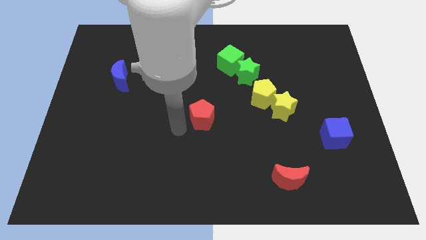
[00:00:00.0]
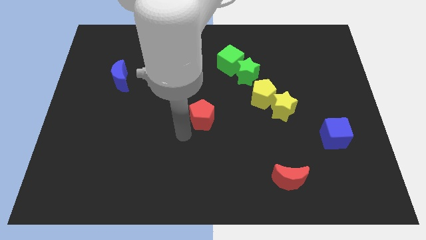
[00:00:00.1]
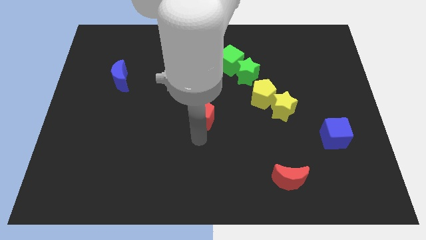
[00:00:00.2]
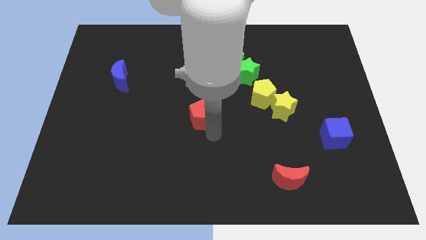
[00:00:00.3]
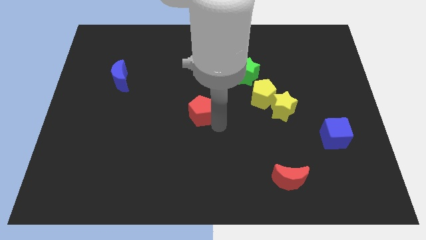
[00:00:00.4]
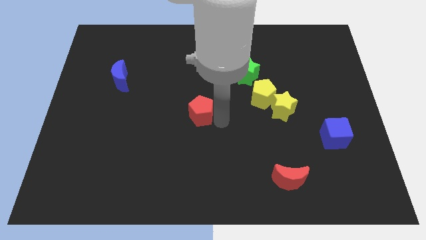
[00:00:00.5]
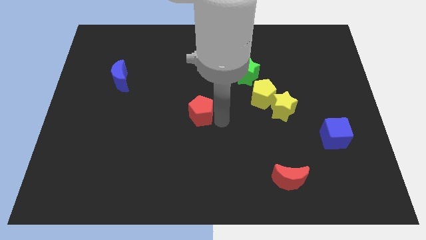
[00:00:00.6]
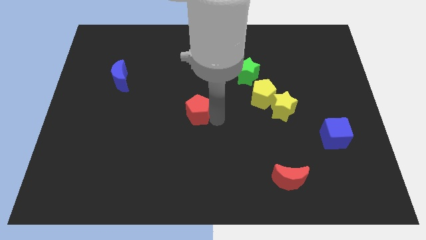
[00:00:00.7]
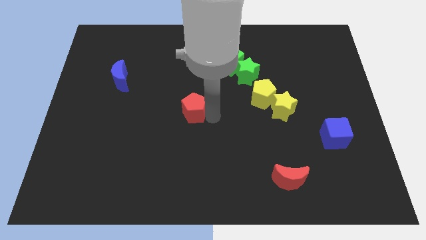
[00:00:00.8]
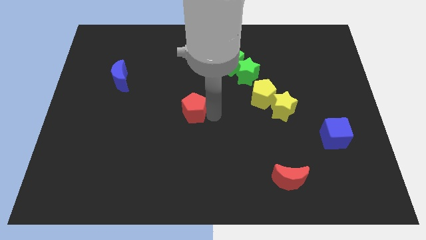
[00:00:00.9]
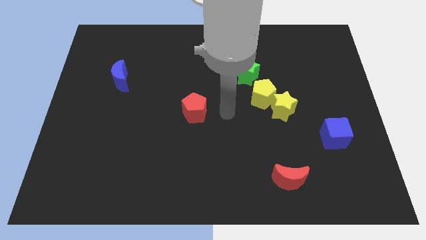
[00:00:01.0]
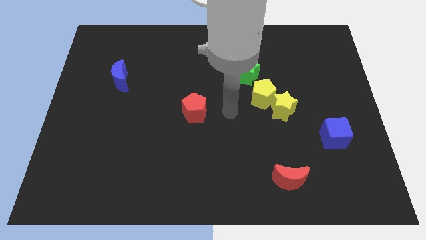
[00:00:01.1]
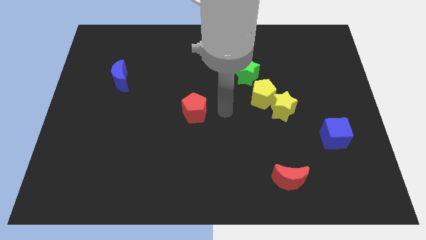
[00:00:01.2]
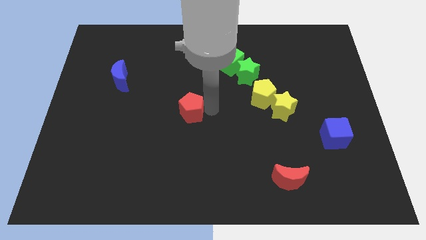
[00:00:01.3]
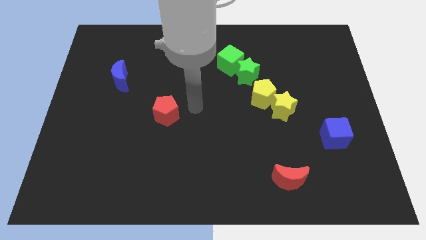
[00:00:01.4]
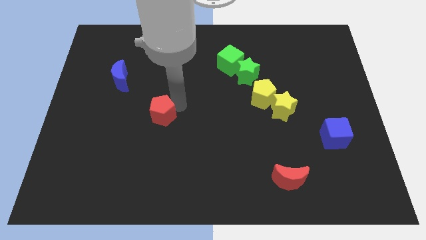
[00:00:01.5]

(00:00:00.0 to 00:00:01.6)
push the red pentagon towards the left side of the board

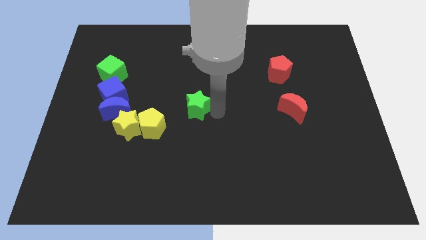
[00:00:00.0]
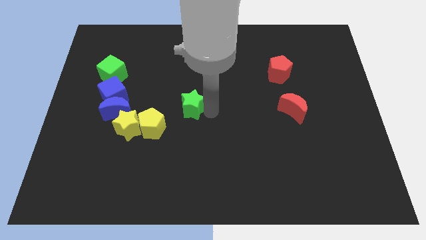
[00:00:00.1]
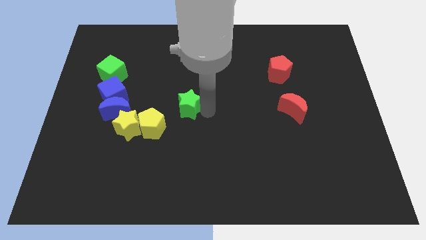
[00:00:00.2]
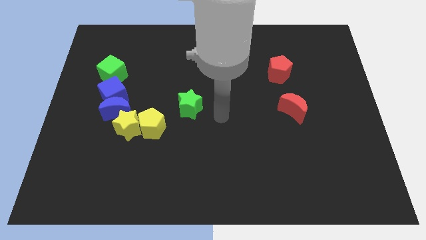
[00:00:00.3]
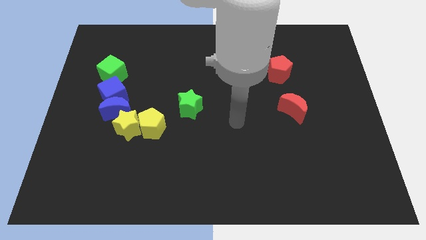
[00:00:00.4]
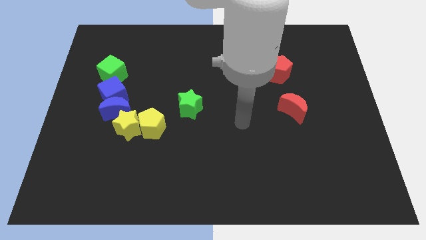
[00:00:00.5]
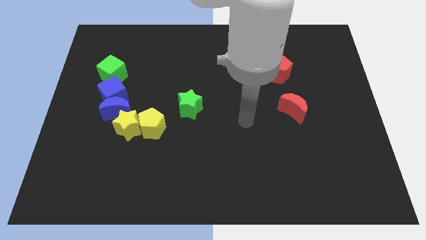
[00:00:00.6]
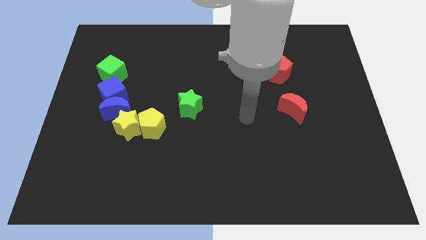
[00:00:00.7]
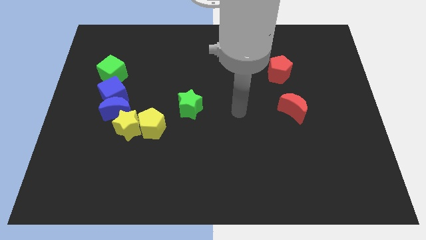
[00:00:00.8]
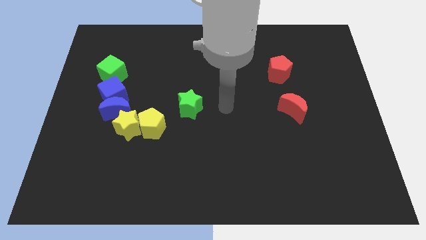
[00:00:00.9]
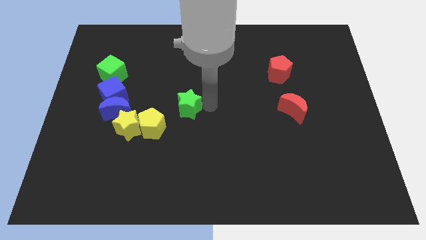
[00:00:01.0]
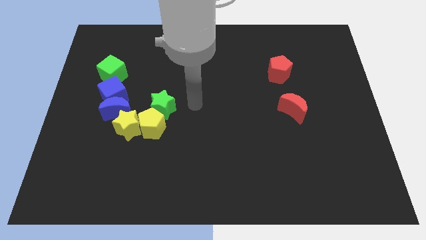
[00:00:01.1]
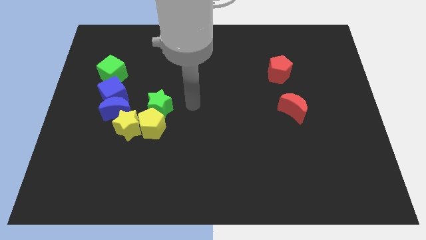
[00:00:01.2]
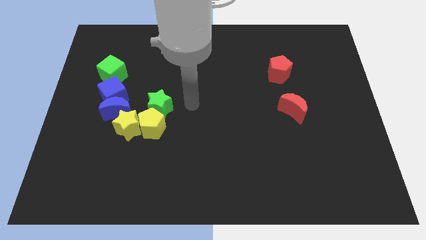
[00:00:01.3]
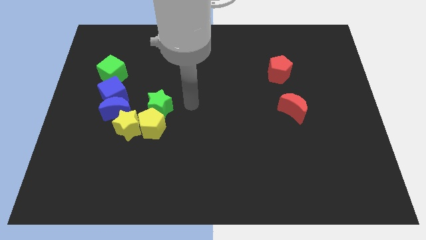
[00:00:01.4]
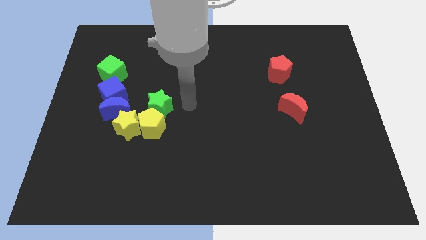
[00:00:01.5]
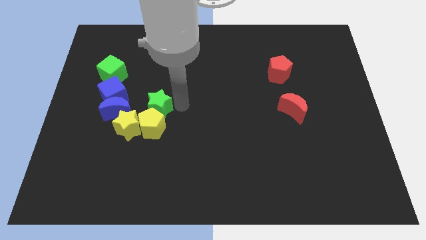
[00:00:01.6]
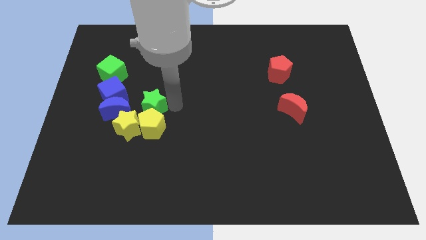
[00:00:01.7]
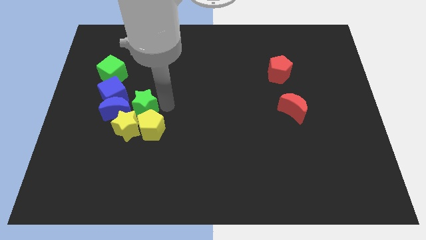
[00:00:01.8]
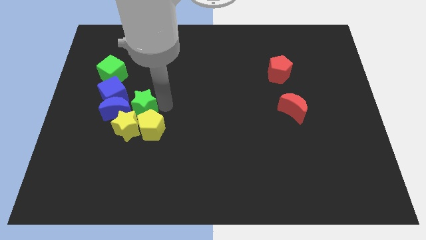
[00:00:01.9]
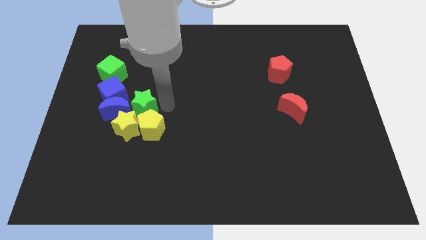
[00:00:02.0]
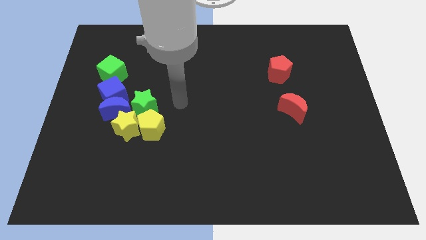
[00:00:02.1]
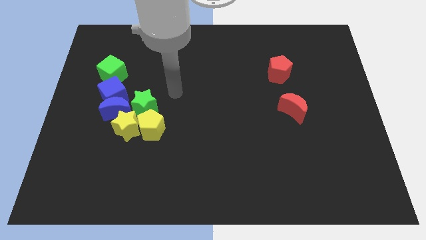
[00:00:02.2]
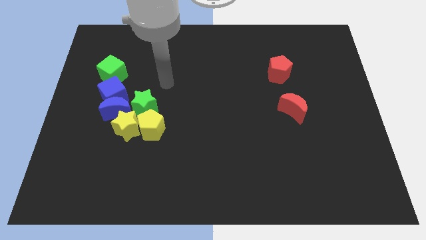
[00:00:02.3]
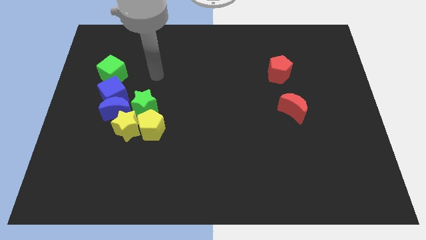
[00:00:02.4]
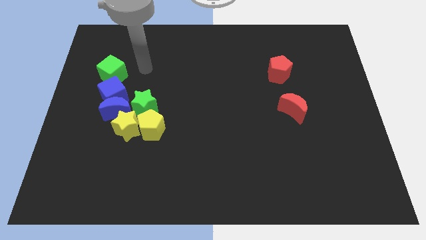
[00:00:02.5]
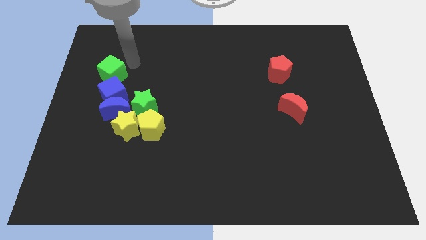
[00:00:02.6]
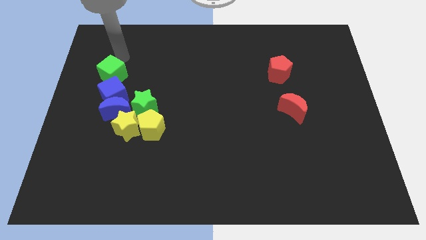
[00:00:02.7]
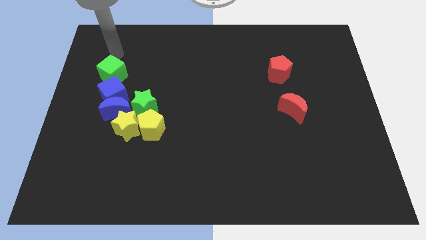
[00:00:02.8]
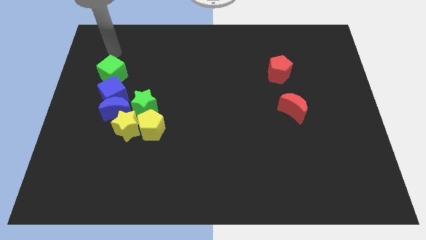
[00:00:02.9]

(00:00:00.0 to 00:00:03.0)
place the green star above the yellow pentagon

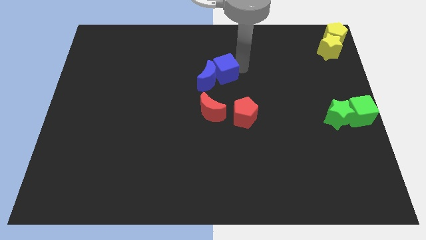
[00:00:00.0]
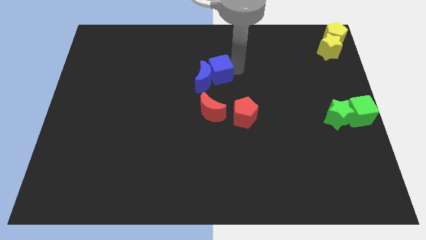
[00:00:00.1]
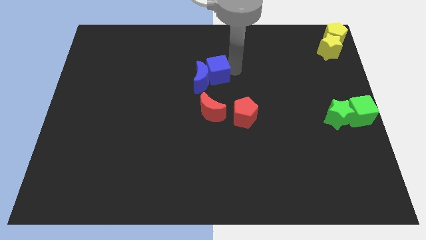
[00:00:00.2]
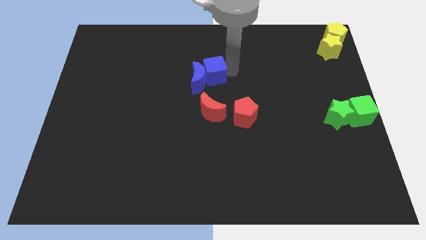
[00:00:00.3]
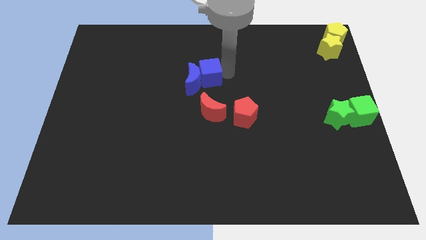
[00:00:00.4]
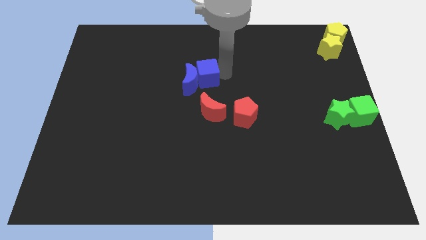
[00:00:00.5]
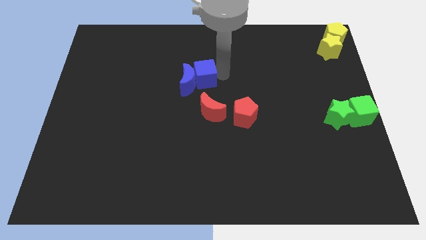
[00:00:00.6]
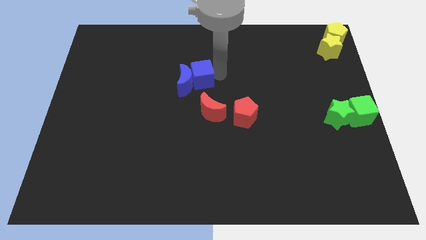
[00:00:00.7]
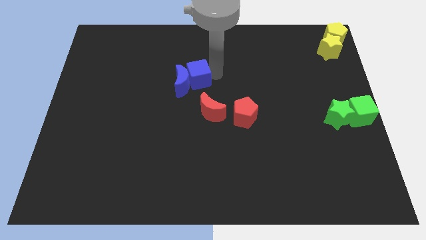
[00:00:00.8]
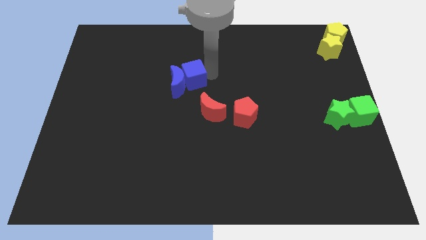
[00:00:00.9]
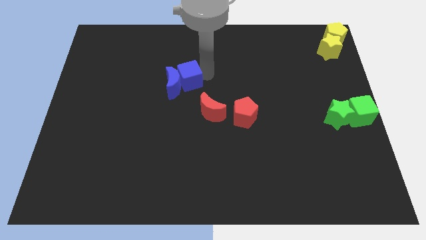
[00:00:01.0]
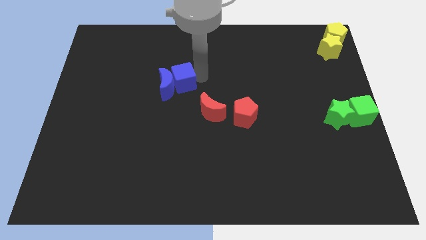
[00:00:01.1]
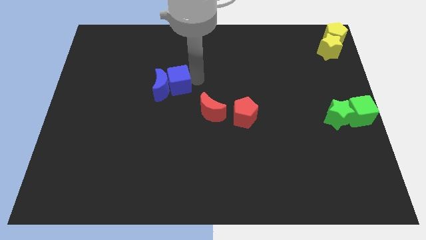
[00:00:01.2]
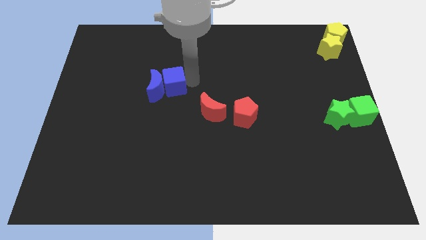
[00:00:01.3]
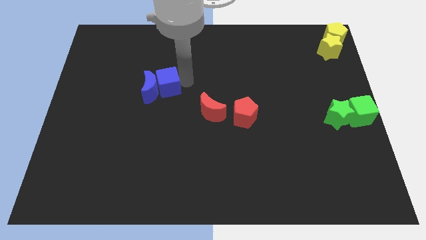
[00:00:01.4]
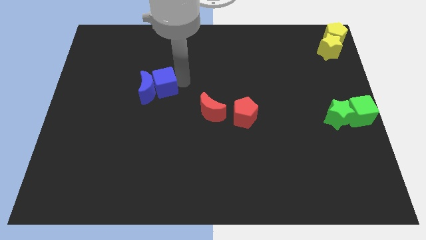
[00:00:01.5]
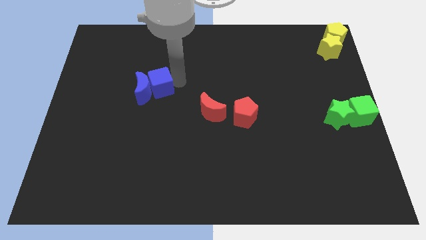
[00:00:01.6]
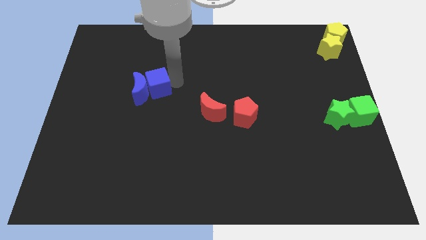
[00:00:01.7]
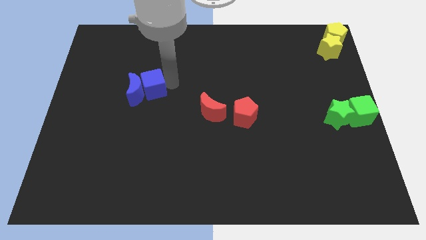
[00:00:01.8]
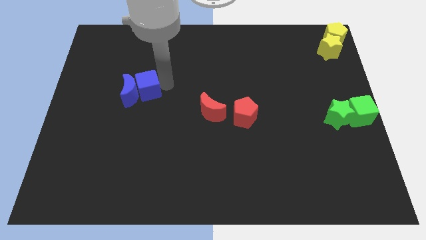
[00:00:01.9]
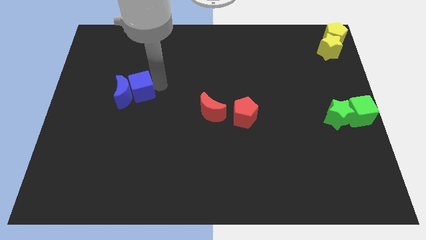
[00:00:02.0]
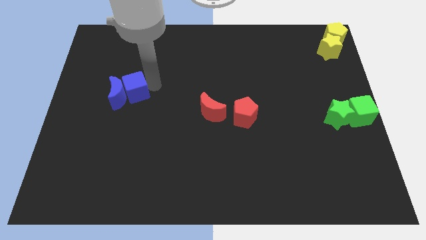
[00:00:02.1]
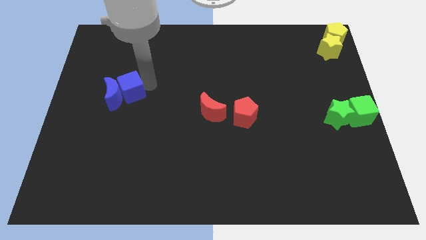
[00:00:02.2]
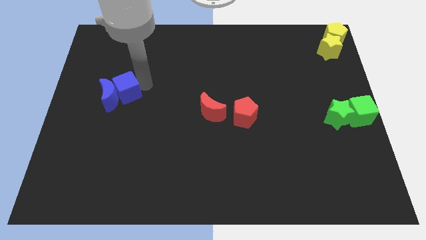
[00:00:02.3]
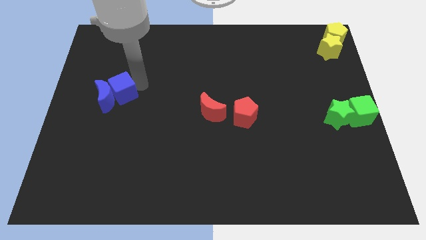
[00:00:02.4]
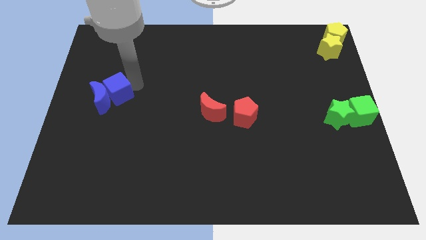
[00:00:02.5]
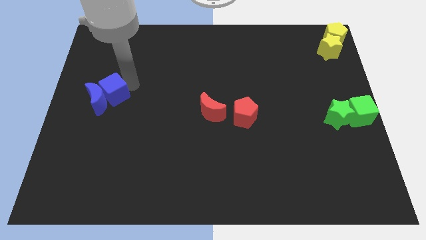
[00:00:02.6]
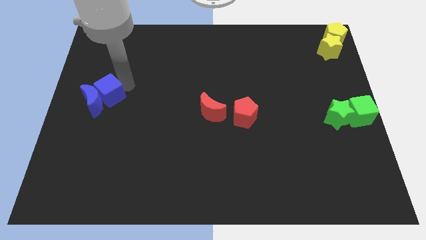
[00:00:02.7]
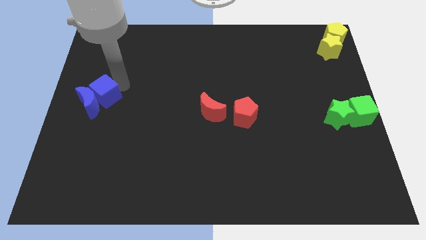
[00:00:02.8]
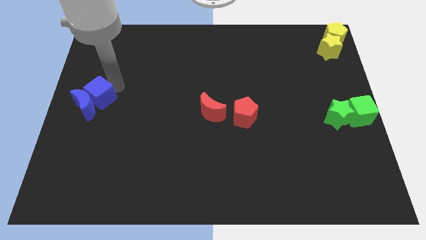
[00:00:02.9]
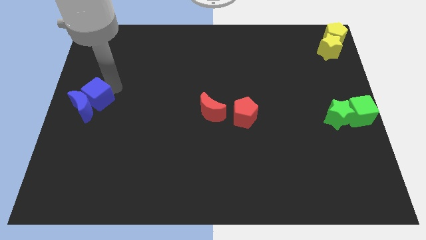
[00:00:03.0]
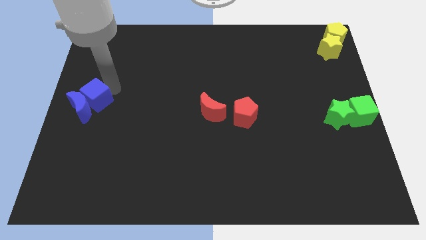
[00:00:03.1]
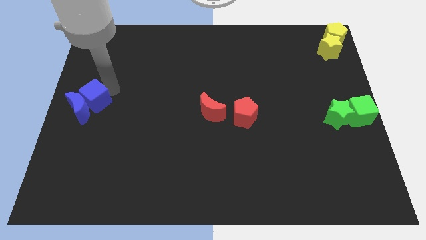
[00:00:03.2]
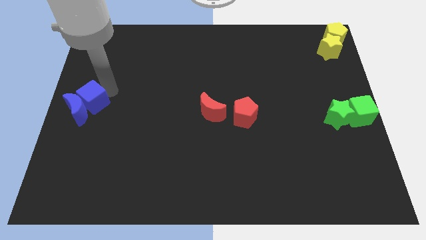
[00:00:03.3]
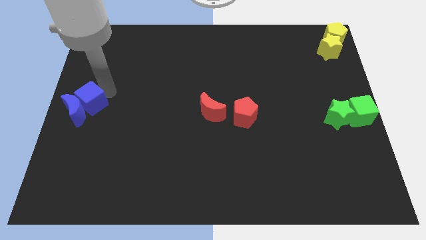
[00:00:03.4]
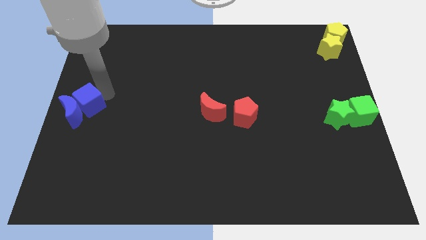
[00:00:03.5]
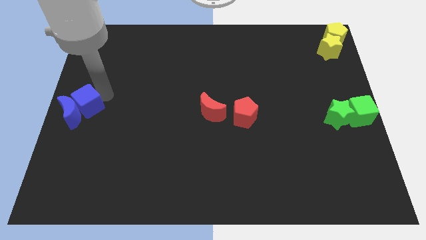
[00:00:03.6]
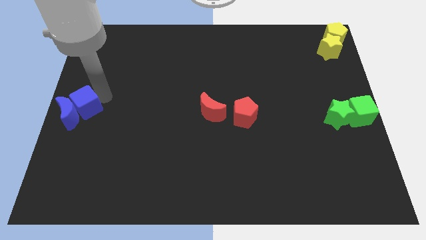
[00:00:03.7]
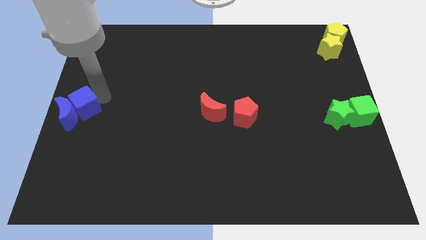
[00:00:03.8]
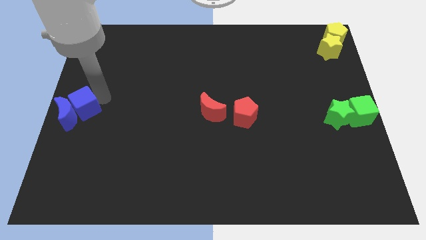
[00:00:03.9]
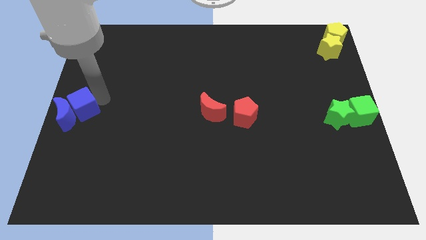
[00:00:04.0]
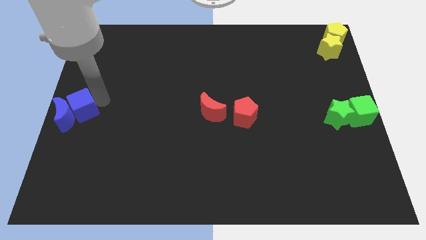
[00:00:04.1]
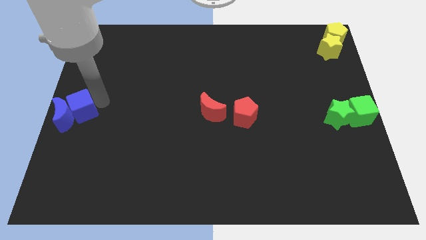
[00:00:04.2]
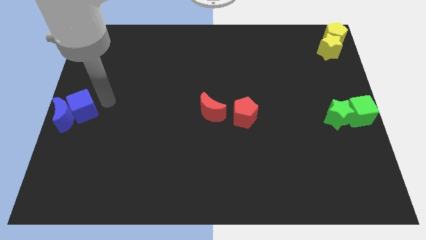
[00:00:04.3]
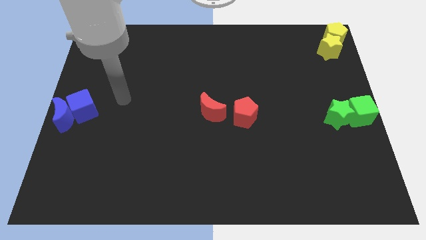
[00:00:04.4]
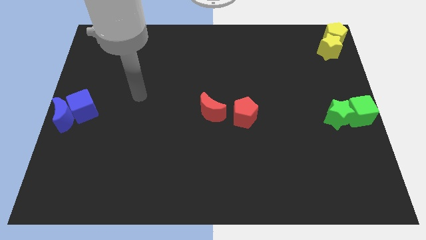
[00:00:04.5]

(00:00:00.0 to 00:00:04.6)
place the blue cube and blue moon to the left center
